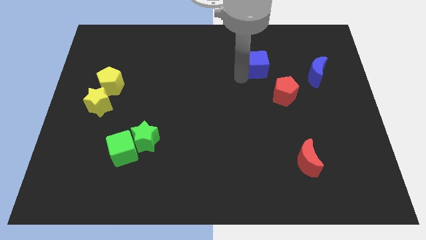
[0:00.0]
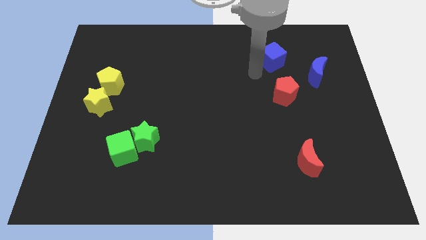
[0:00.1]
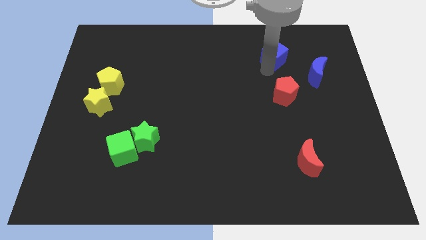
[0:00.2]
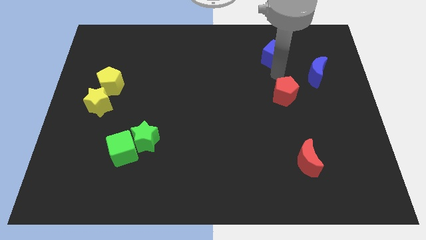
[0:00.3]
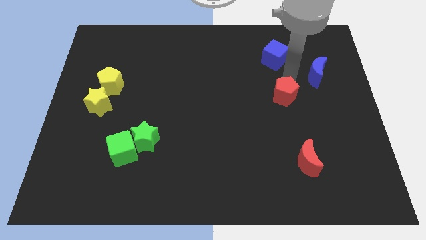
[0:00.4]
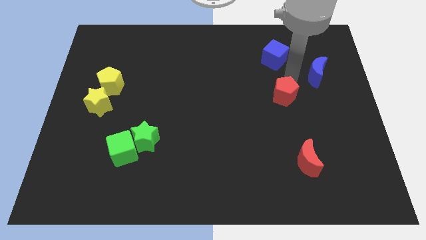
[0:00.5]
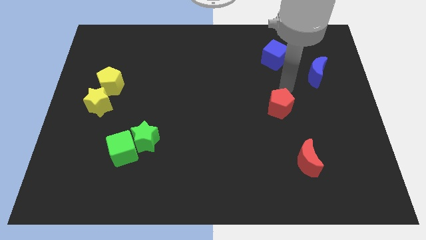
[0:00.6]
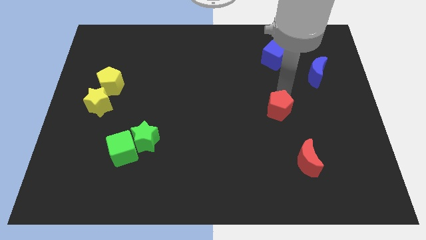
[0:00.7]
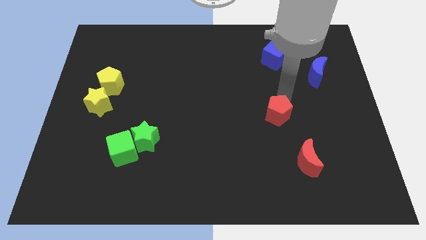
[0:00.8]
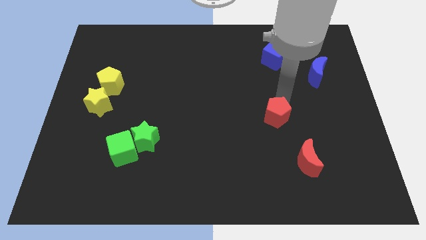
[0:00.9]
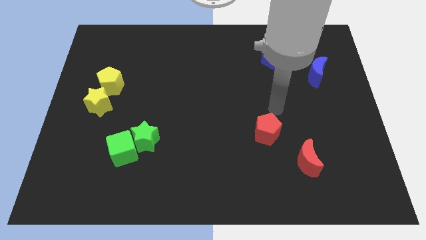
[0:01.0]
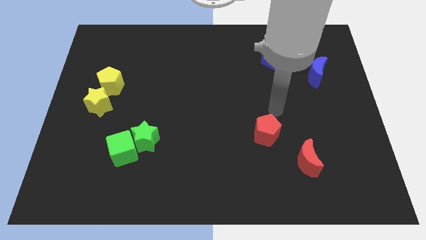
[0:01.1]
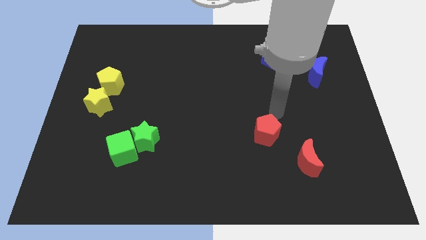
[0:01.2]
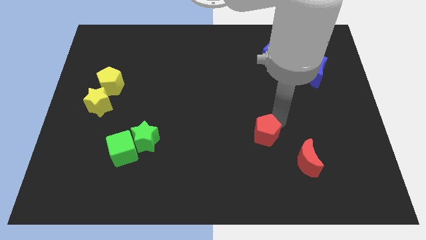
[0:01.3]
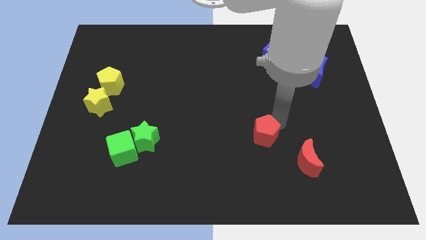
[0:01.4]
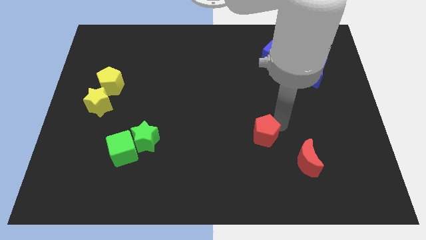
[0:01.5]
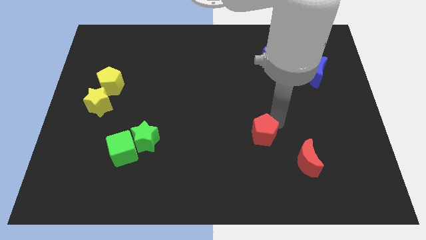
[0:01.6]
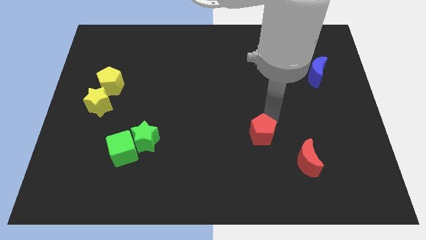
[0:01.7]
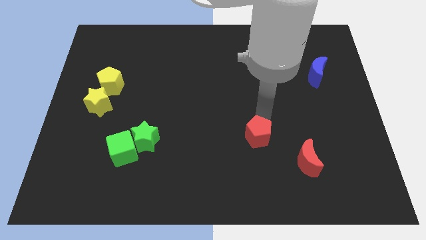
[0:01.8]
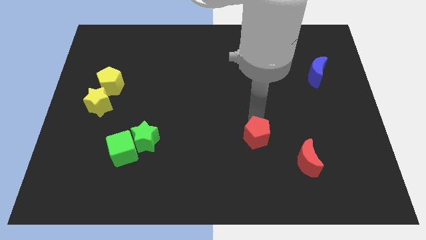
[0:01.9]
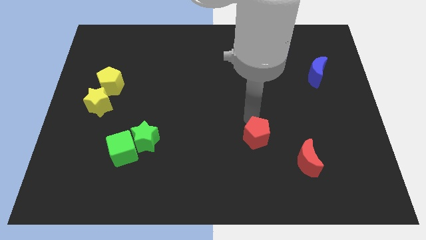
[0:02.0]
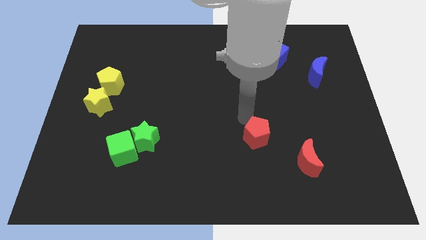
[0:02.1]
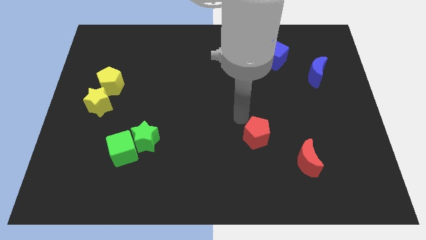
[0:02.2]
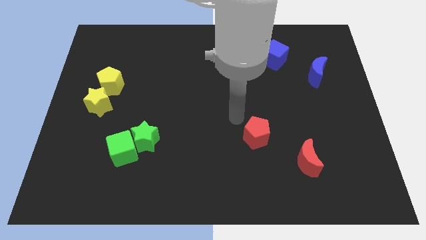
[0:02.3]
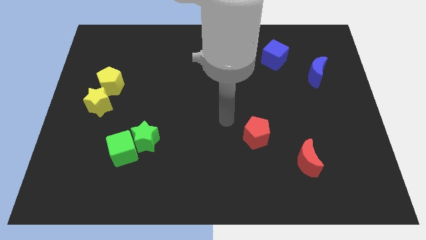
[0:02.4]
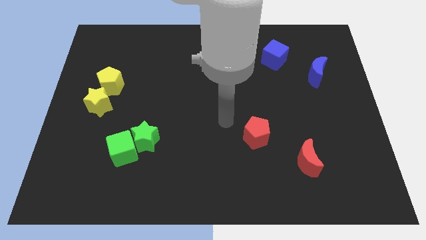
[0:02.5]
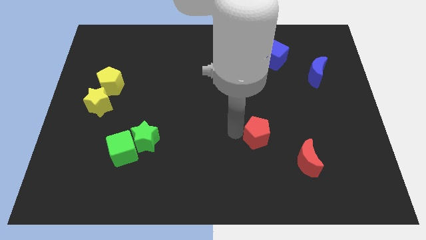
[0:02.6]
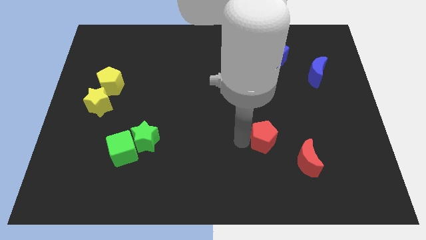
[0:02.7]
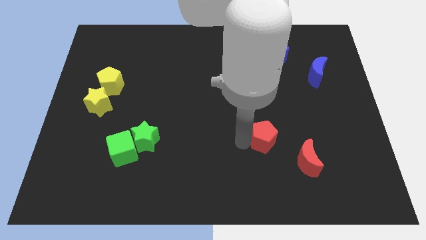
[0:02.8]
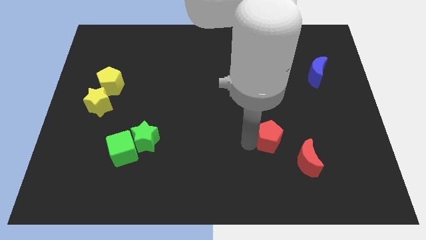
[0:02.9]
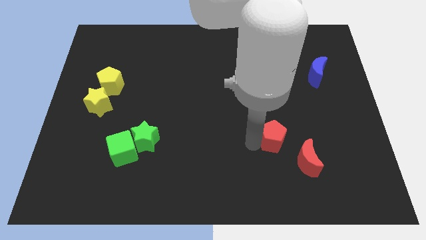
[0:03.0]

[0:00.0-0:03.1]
move the red pentagon diagonally to the right side of red moon

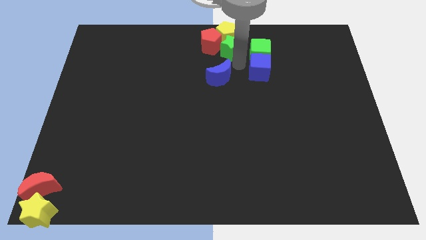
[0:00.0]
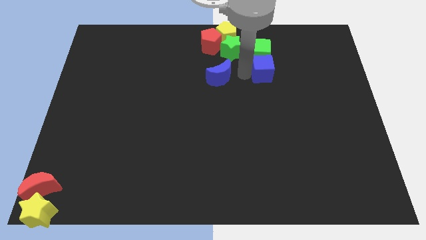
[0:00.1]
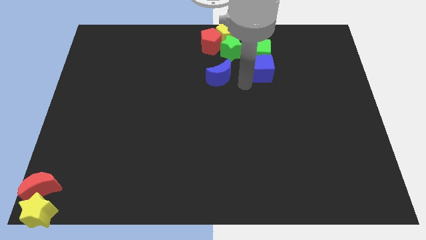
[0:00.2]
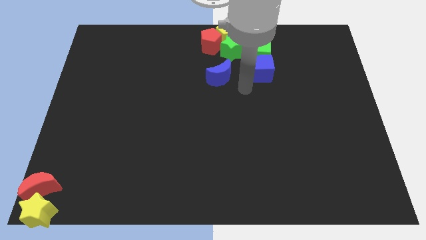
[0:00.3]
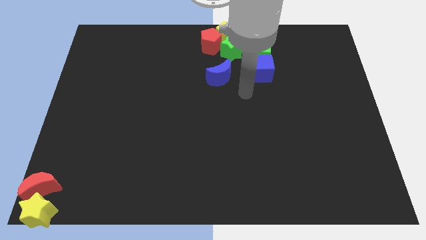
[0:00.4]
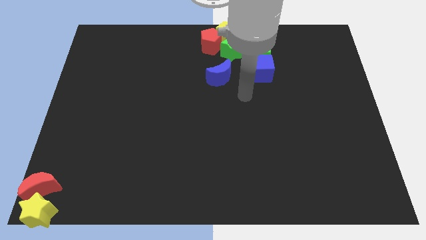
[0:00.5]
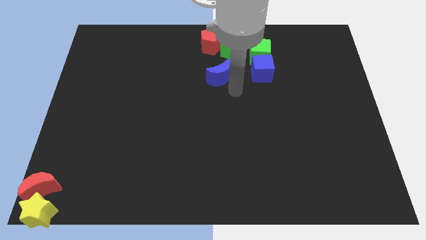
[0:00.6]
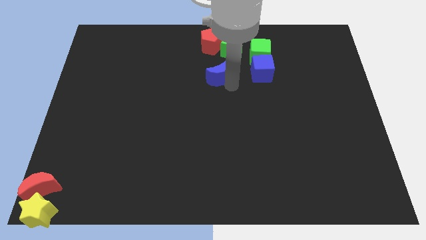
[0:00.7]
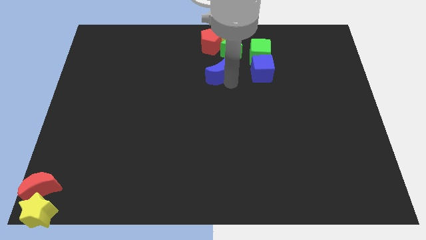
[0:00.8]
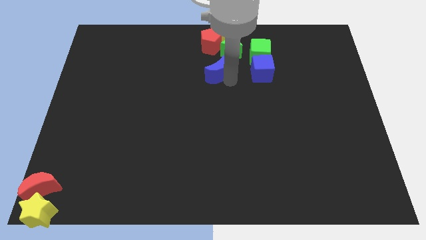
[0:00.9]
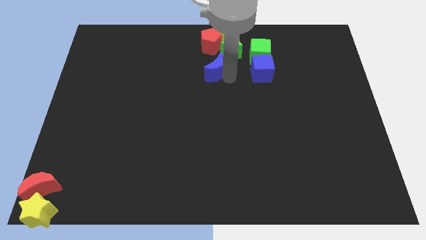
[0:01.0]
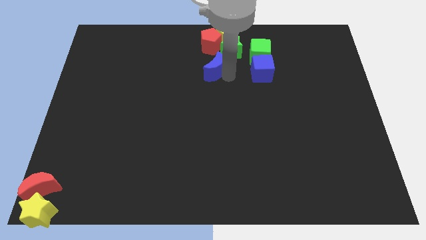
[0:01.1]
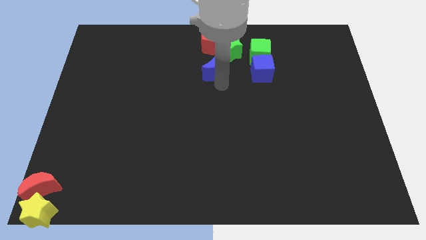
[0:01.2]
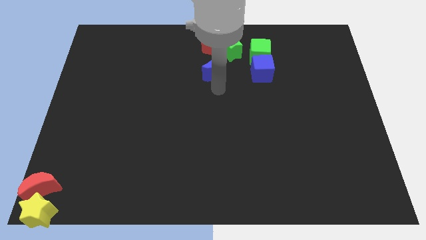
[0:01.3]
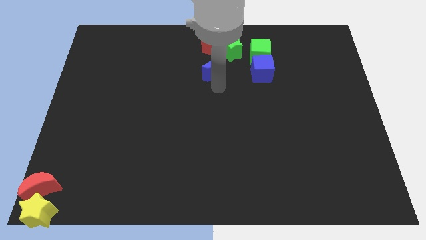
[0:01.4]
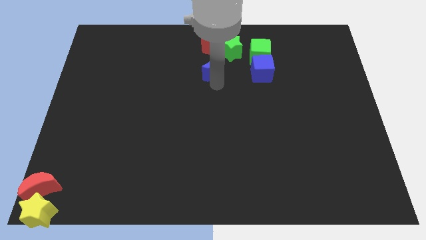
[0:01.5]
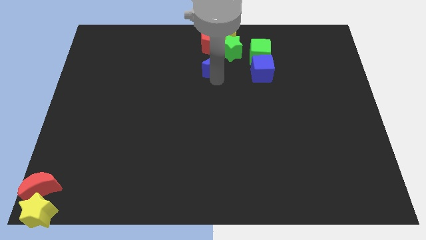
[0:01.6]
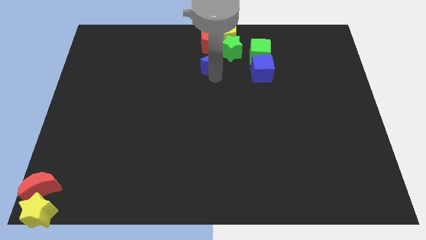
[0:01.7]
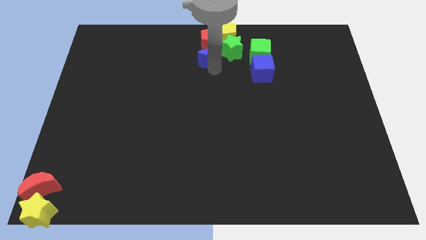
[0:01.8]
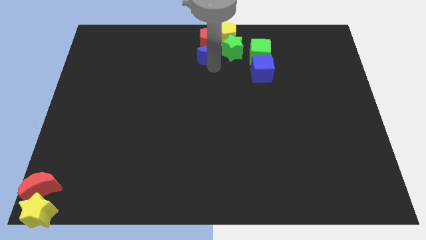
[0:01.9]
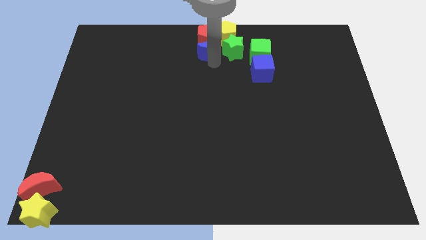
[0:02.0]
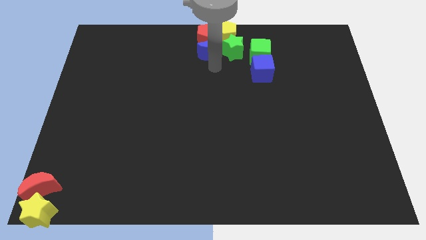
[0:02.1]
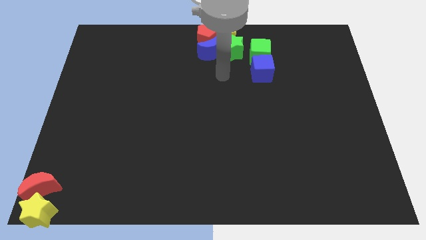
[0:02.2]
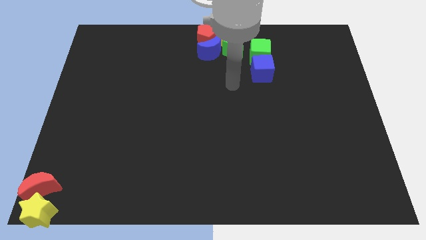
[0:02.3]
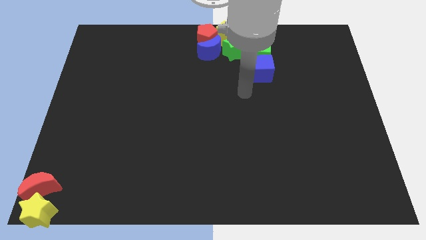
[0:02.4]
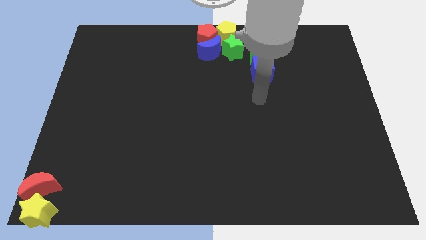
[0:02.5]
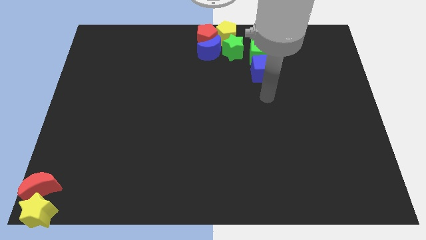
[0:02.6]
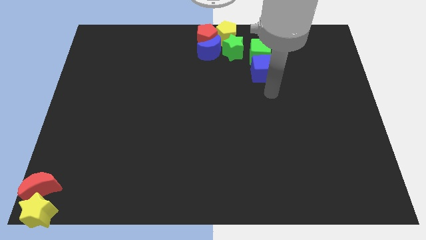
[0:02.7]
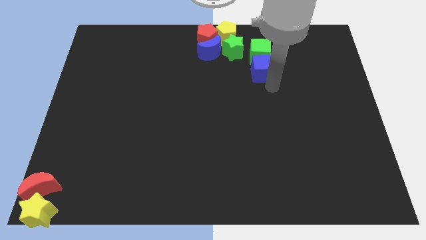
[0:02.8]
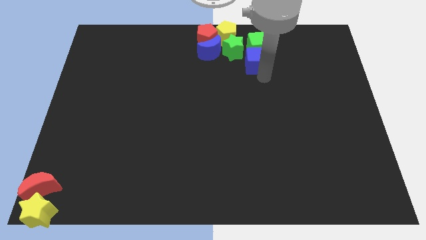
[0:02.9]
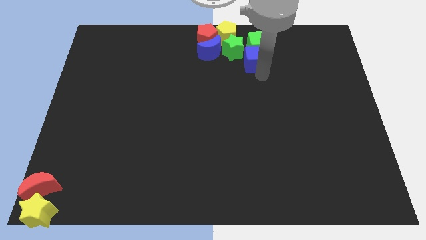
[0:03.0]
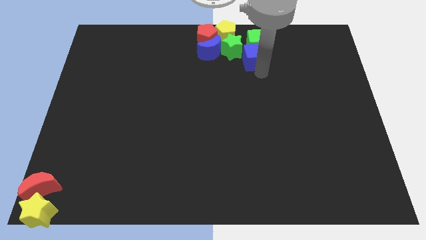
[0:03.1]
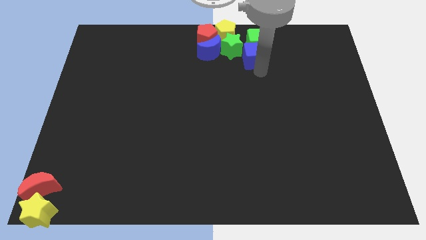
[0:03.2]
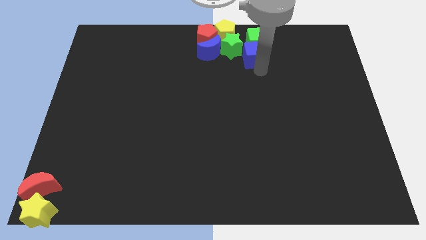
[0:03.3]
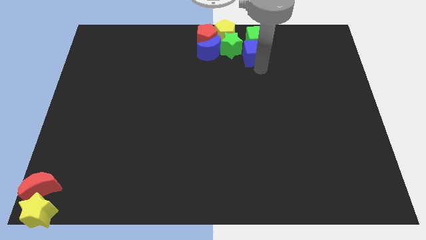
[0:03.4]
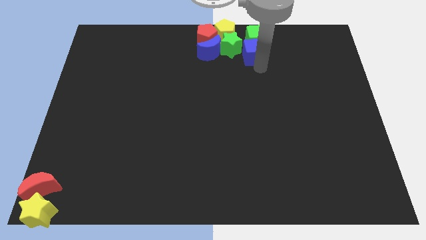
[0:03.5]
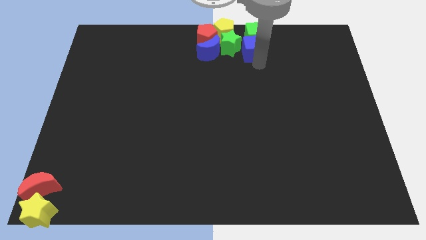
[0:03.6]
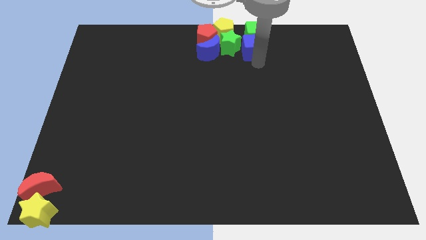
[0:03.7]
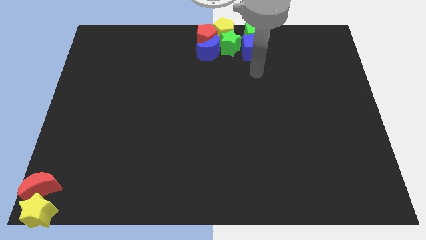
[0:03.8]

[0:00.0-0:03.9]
slide the blue moon at the bottom of the red crescent

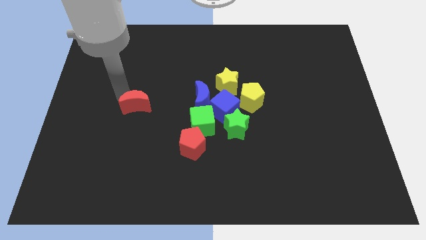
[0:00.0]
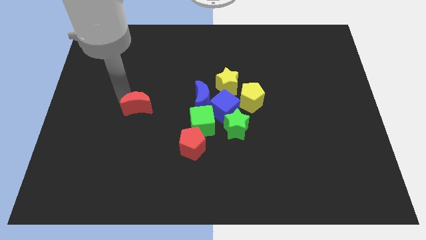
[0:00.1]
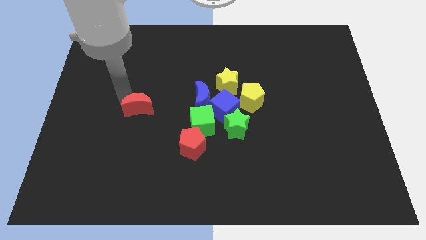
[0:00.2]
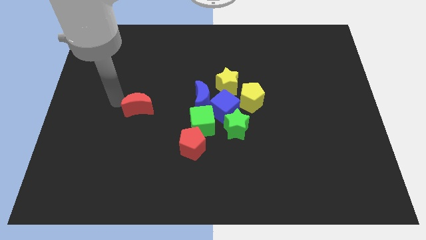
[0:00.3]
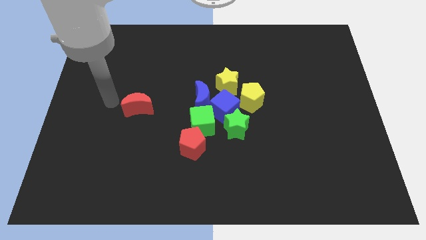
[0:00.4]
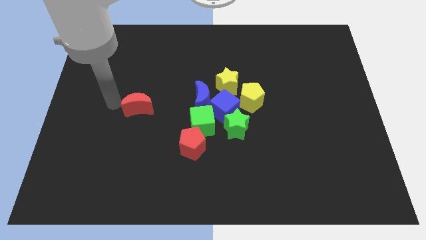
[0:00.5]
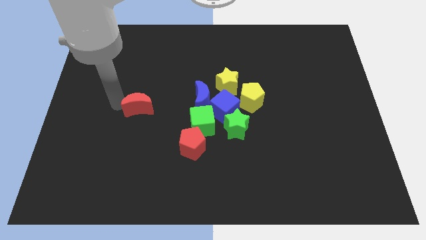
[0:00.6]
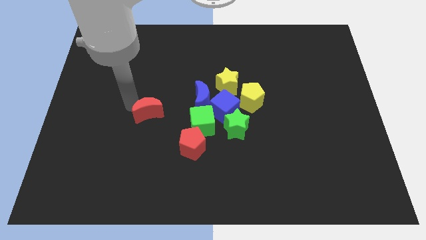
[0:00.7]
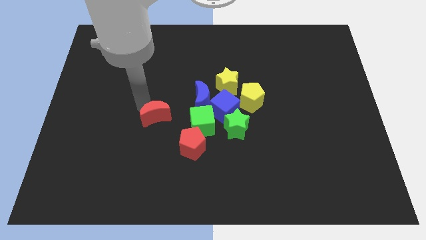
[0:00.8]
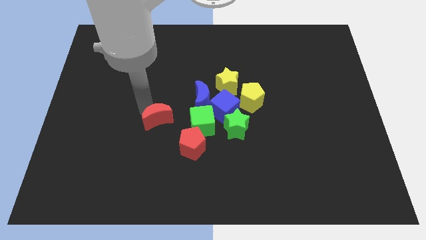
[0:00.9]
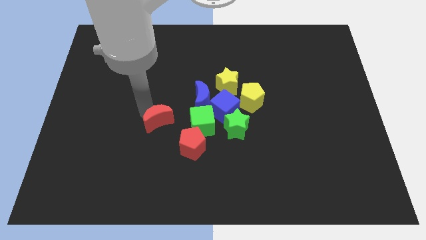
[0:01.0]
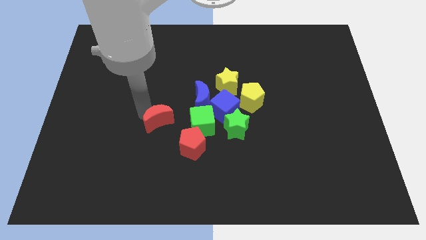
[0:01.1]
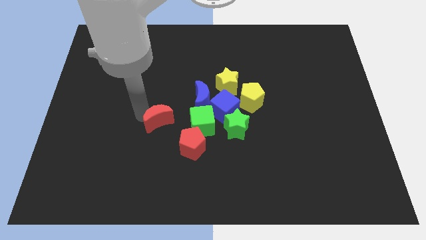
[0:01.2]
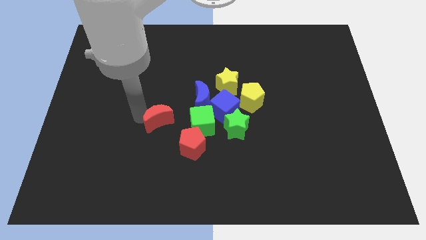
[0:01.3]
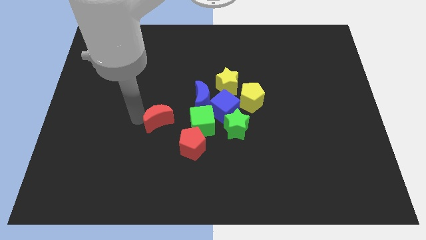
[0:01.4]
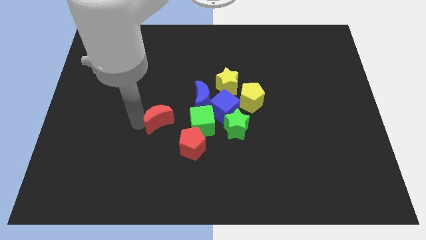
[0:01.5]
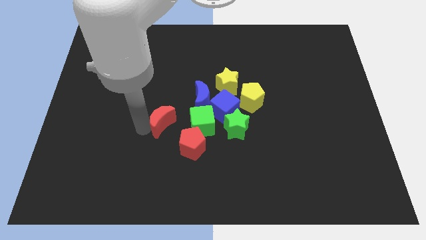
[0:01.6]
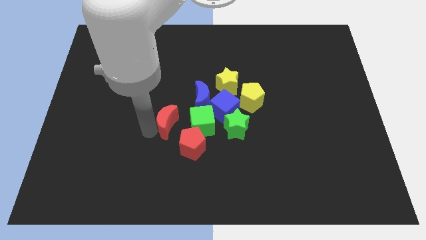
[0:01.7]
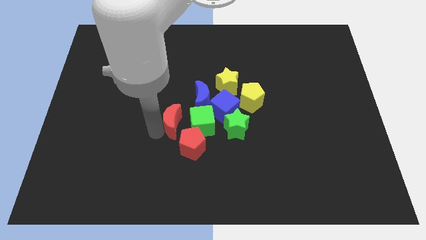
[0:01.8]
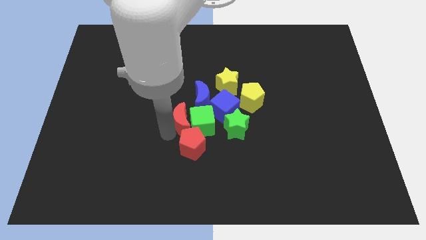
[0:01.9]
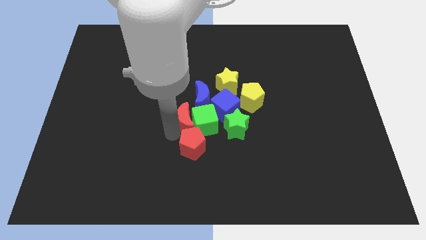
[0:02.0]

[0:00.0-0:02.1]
move red crescent into the group of blocks

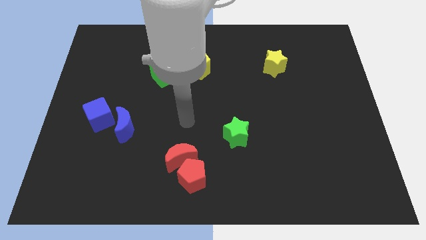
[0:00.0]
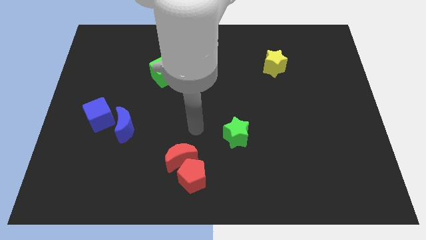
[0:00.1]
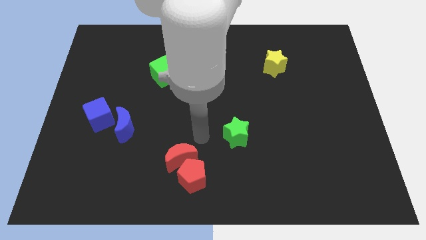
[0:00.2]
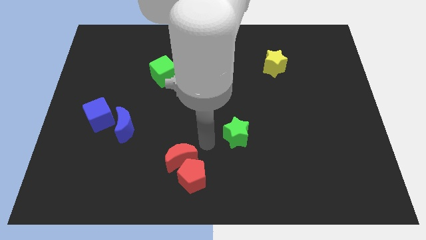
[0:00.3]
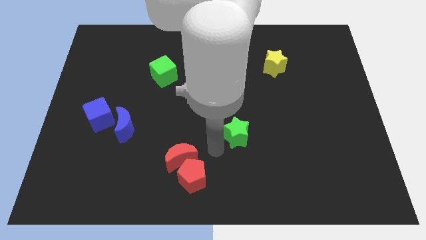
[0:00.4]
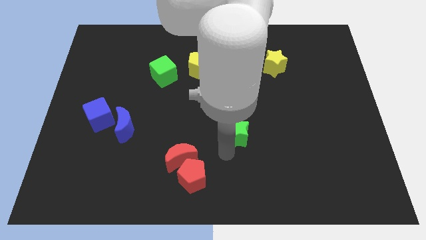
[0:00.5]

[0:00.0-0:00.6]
move the arm in between the red crescent and green start
